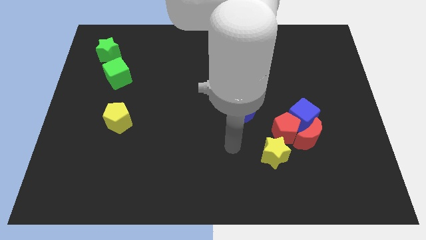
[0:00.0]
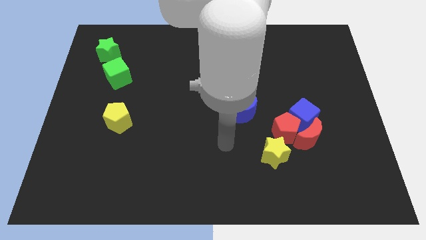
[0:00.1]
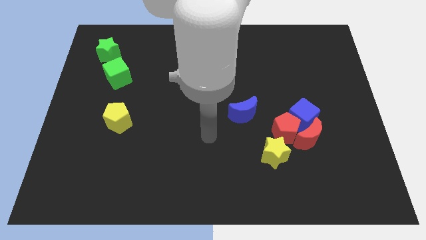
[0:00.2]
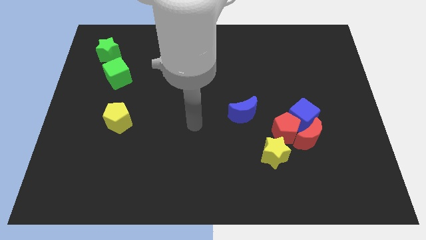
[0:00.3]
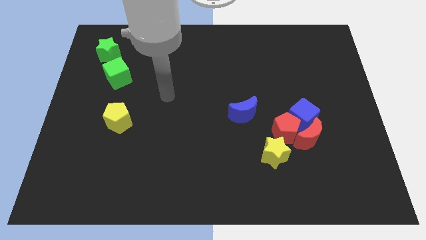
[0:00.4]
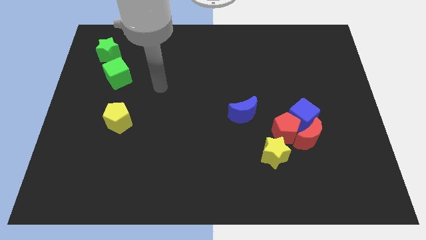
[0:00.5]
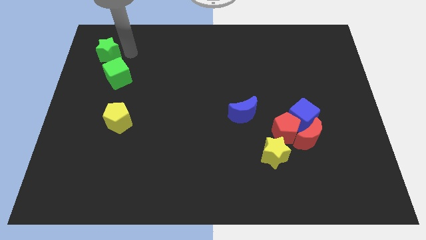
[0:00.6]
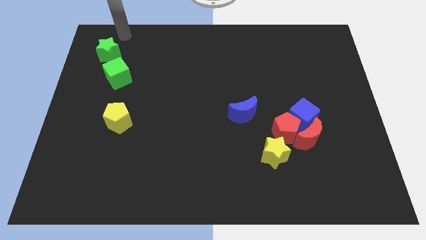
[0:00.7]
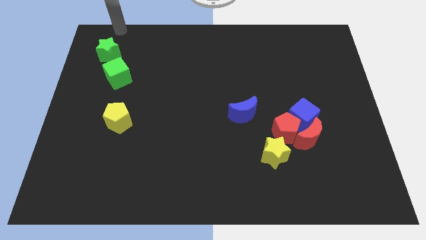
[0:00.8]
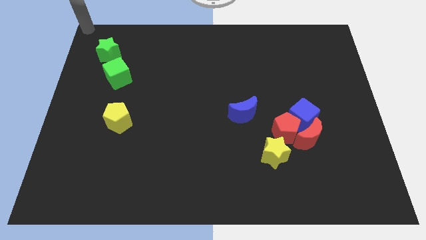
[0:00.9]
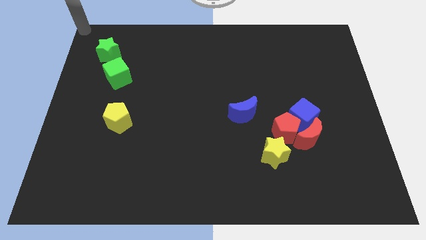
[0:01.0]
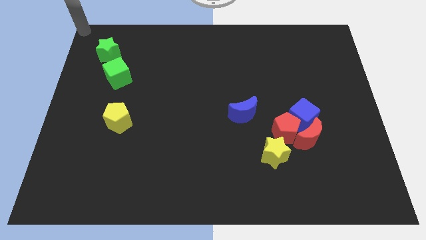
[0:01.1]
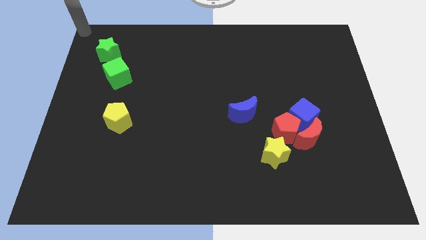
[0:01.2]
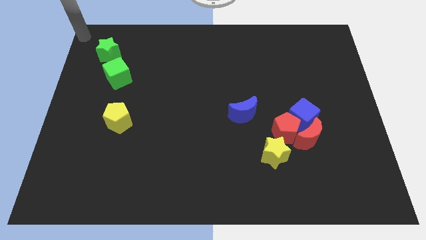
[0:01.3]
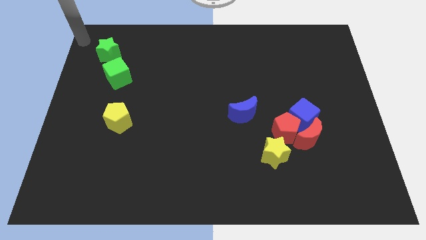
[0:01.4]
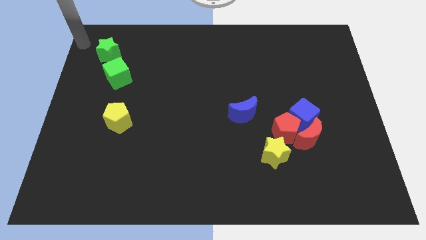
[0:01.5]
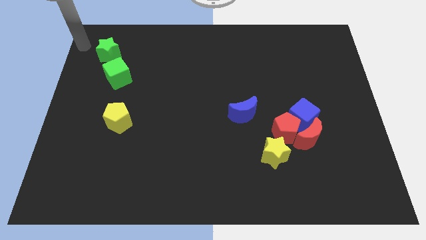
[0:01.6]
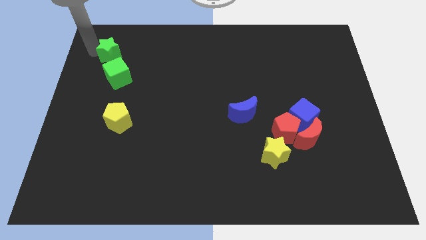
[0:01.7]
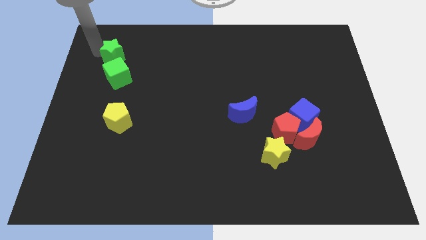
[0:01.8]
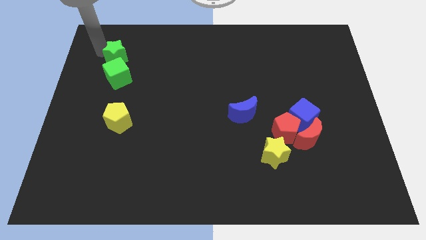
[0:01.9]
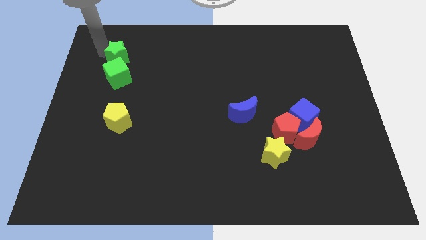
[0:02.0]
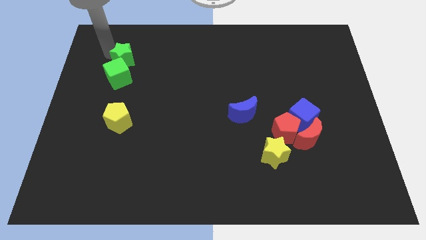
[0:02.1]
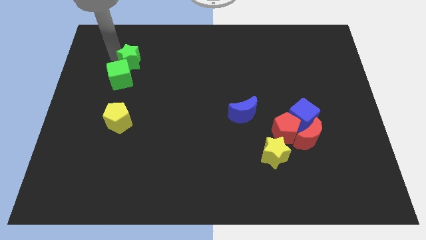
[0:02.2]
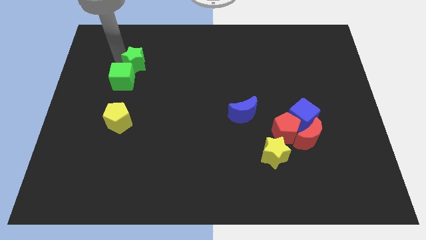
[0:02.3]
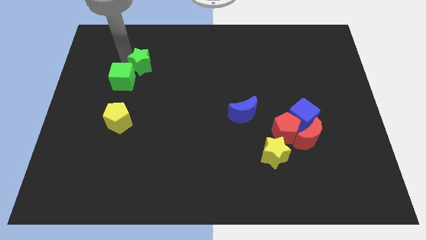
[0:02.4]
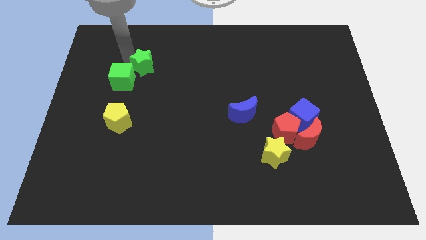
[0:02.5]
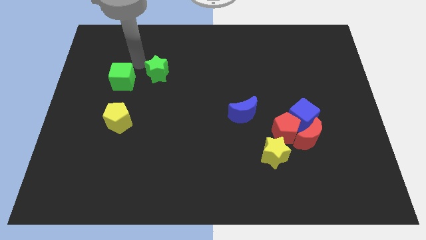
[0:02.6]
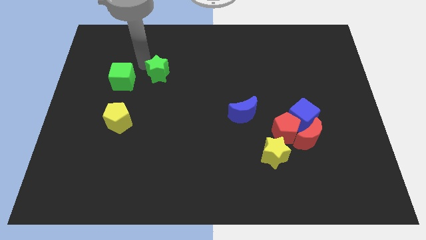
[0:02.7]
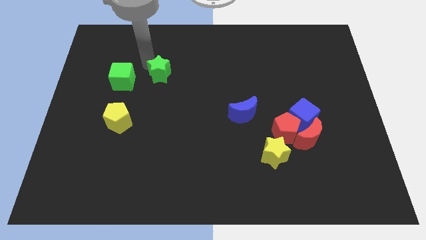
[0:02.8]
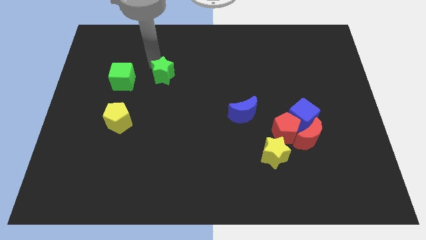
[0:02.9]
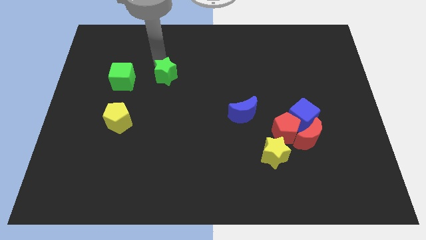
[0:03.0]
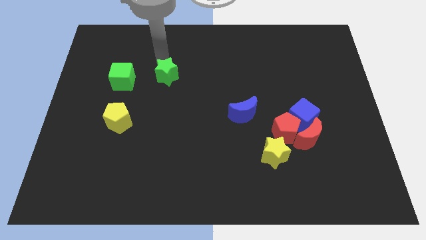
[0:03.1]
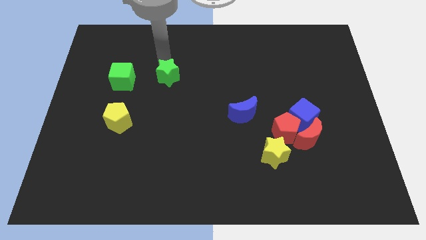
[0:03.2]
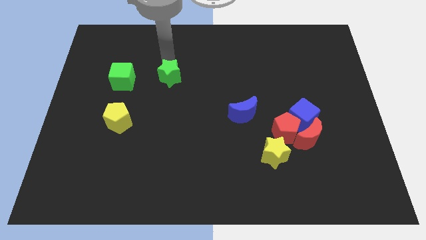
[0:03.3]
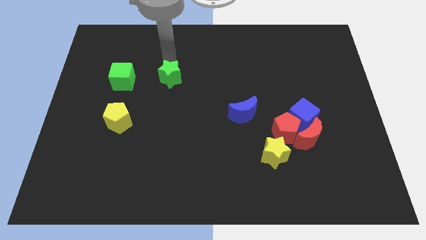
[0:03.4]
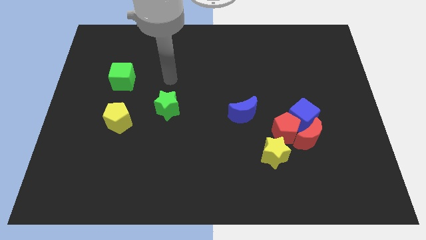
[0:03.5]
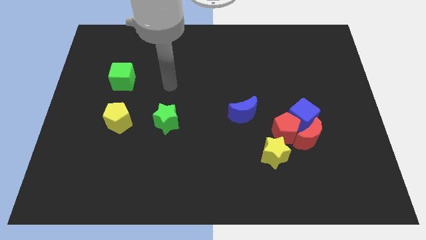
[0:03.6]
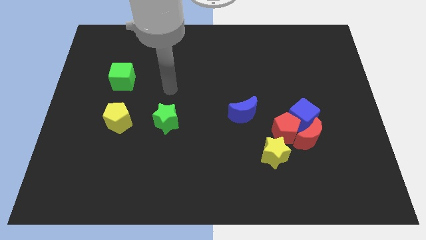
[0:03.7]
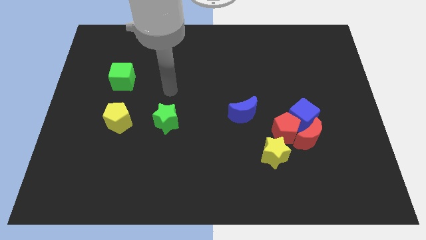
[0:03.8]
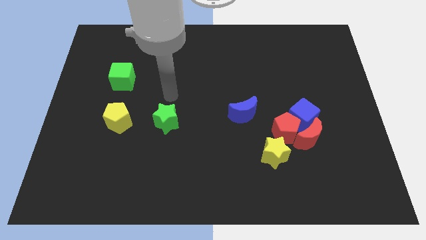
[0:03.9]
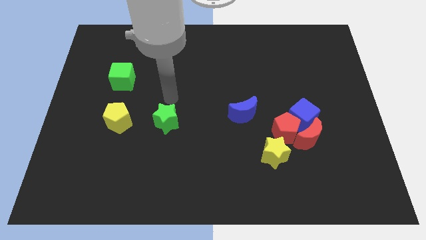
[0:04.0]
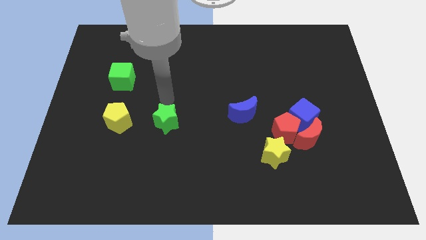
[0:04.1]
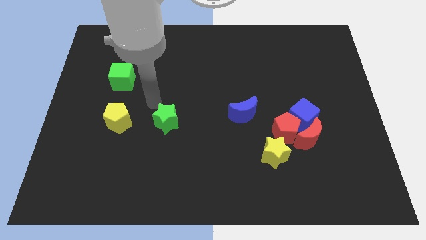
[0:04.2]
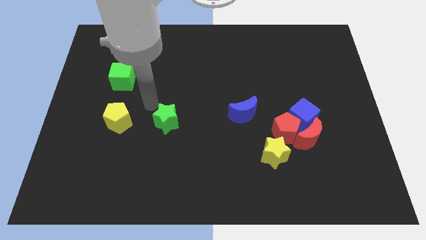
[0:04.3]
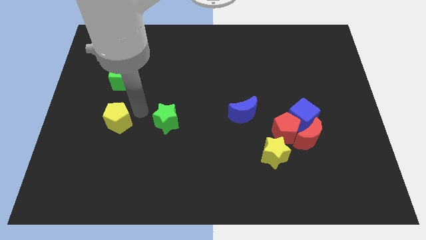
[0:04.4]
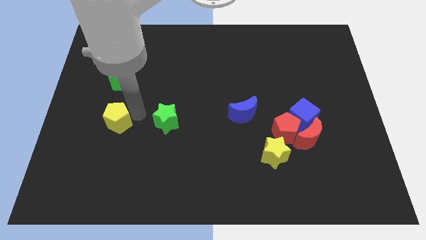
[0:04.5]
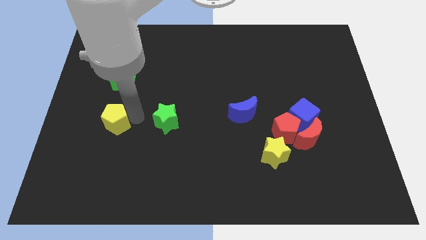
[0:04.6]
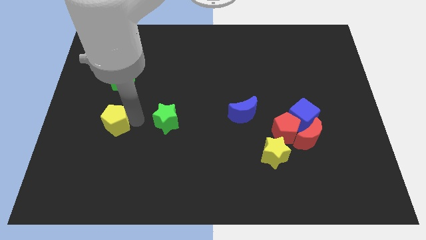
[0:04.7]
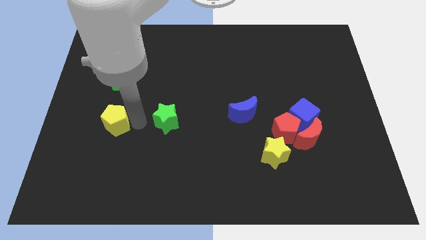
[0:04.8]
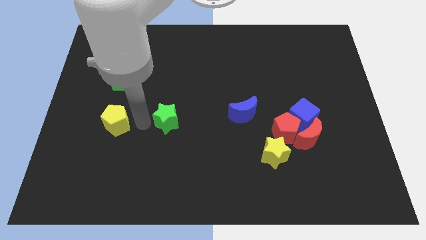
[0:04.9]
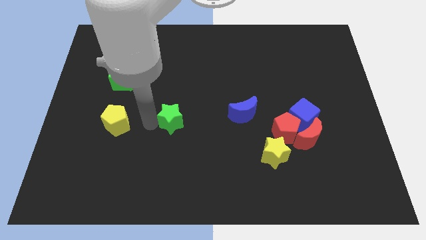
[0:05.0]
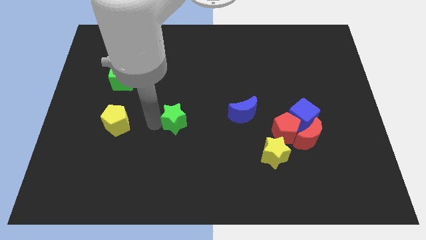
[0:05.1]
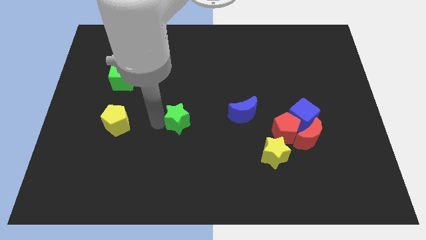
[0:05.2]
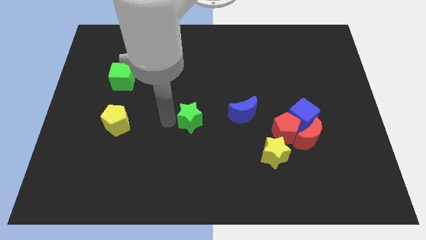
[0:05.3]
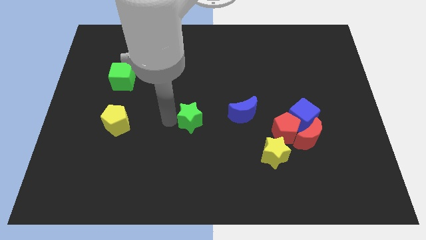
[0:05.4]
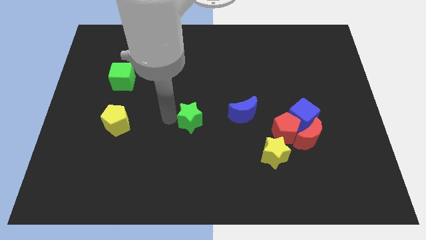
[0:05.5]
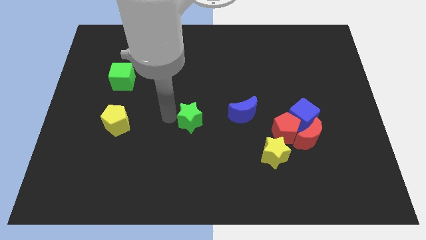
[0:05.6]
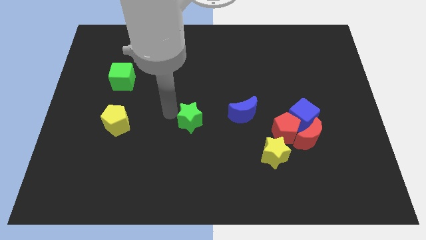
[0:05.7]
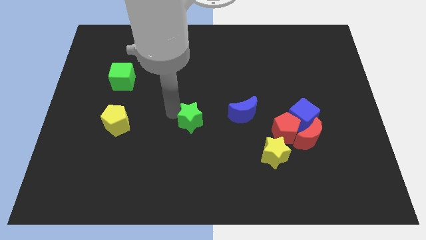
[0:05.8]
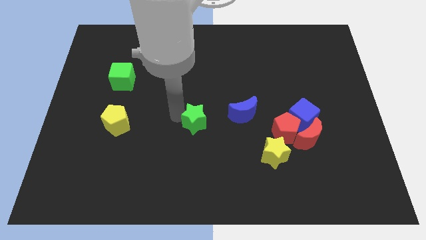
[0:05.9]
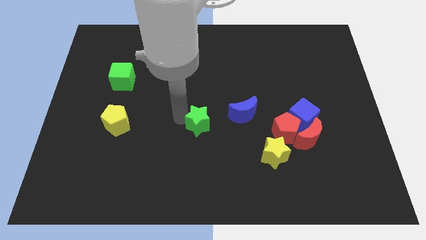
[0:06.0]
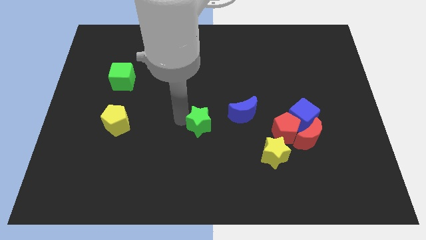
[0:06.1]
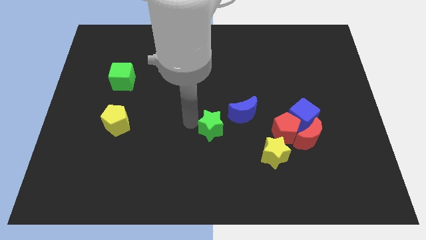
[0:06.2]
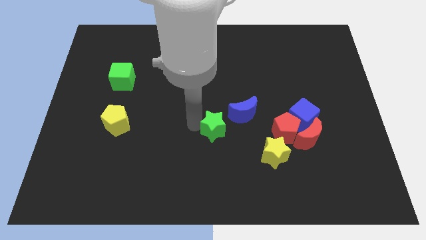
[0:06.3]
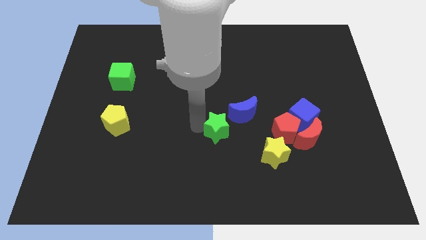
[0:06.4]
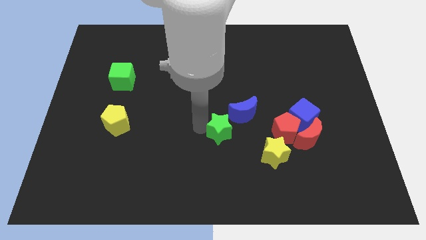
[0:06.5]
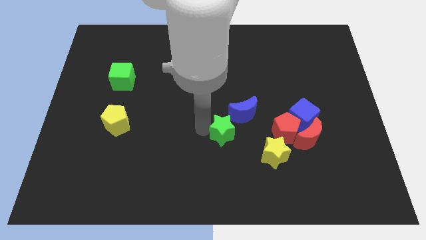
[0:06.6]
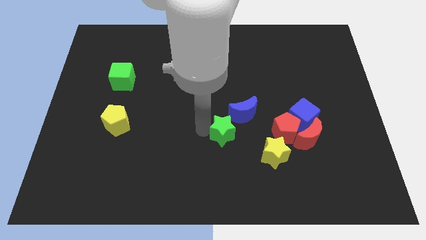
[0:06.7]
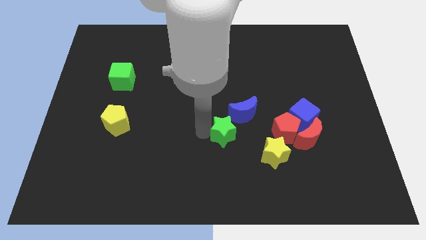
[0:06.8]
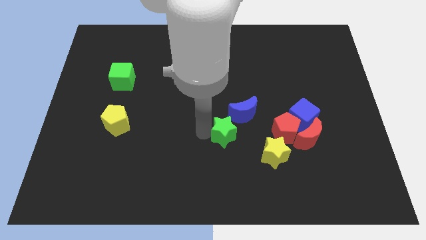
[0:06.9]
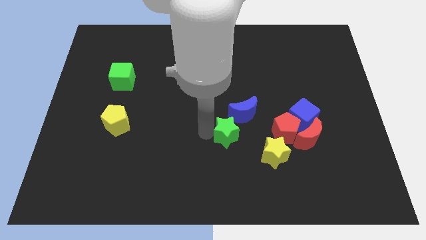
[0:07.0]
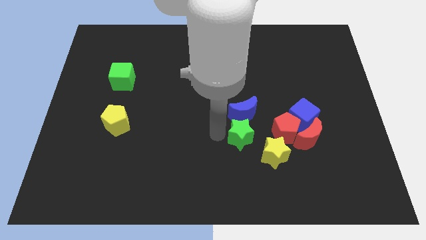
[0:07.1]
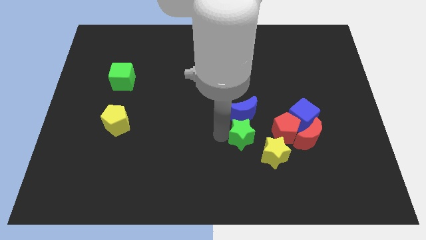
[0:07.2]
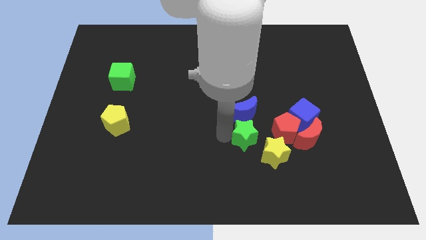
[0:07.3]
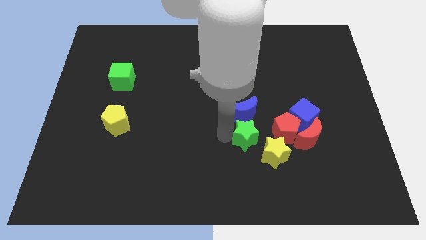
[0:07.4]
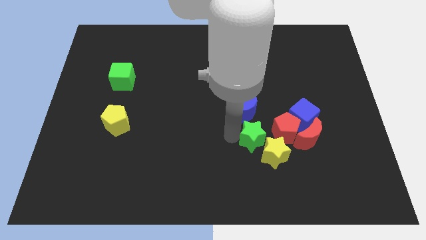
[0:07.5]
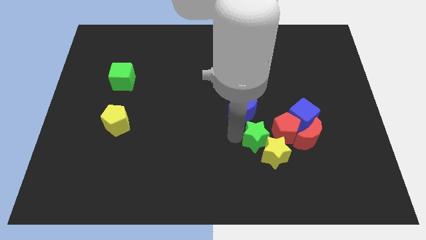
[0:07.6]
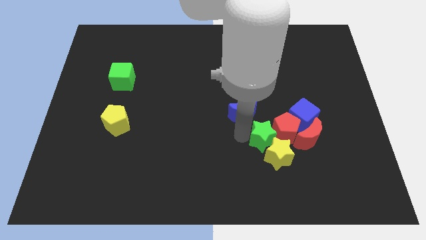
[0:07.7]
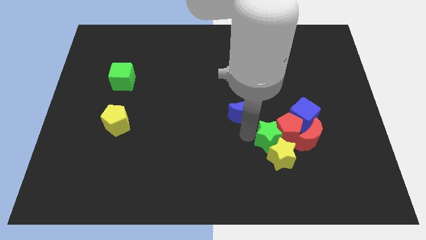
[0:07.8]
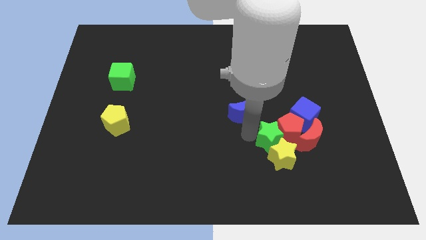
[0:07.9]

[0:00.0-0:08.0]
push the green star close to the red pentagon
